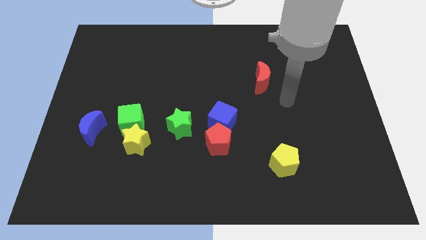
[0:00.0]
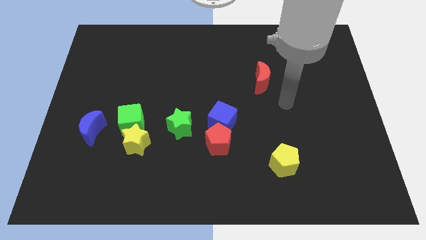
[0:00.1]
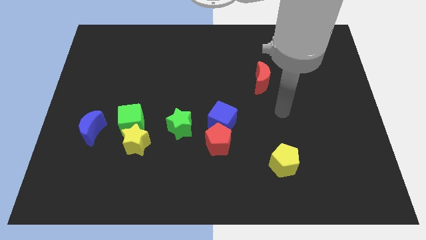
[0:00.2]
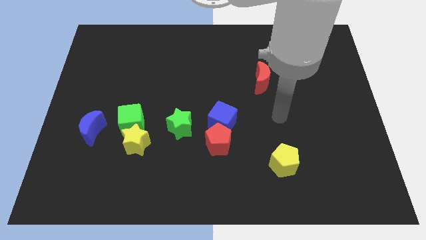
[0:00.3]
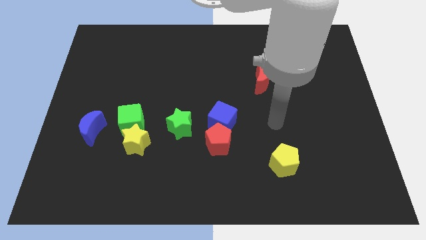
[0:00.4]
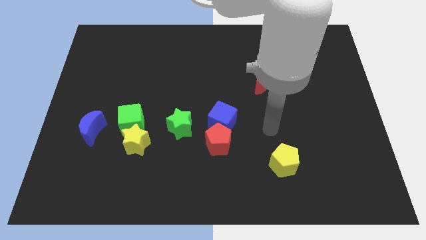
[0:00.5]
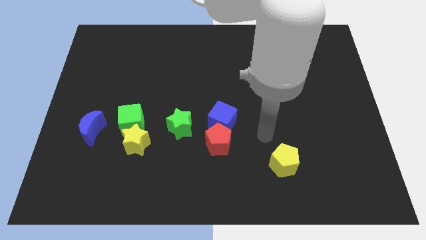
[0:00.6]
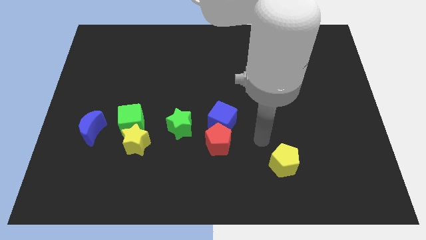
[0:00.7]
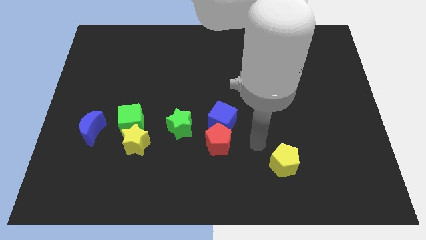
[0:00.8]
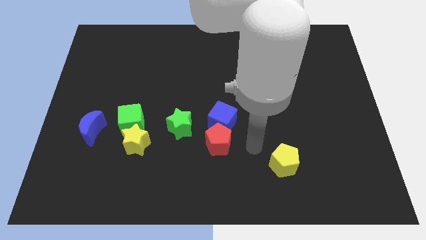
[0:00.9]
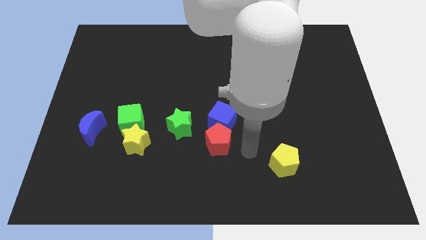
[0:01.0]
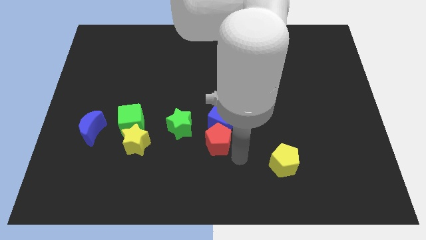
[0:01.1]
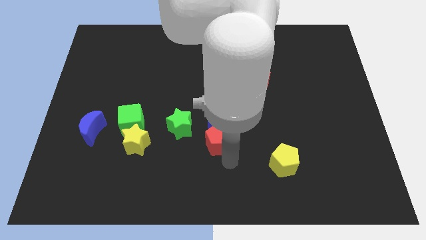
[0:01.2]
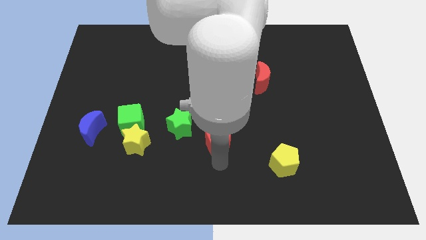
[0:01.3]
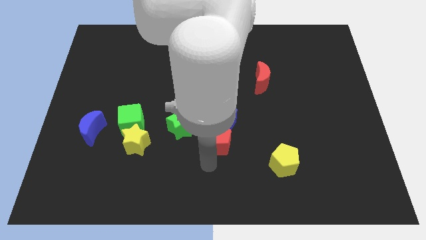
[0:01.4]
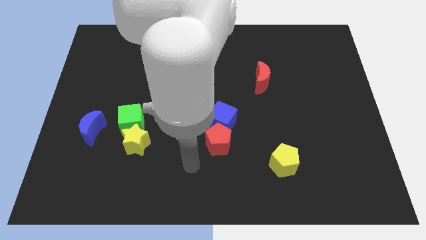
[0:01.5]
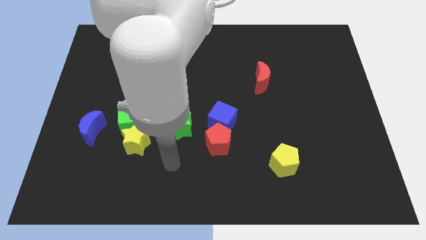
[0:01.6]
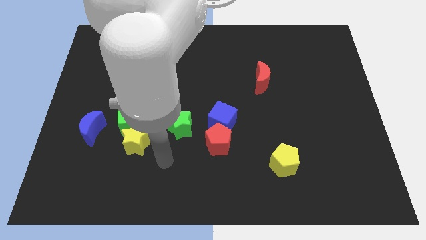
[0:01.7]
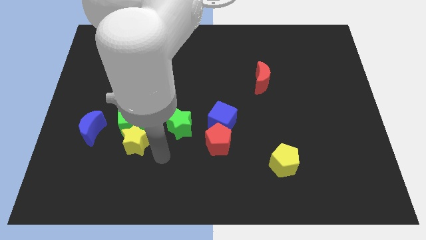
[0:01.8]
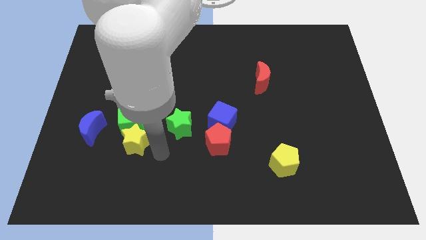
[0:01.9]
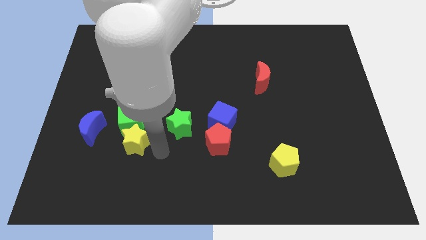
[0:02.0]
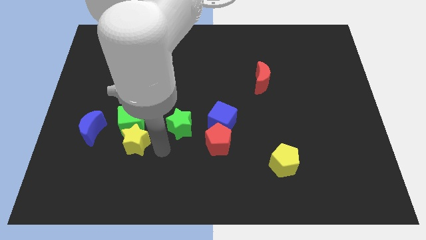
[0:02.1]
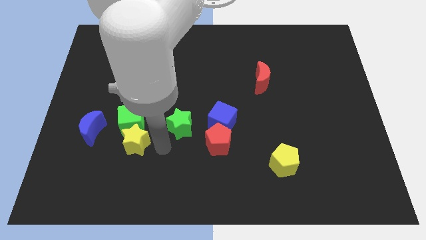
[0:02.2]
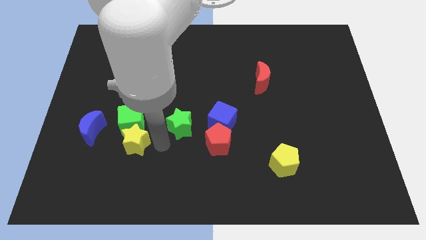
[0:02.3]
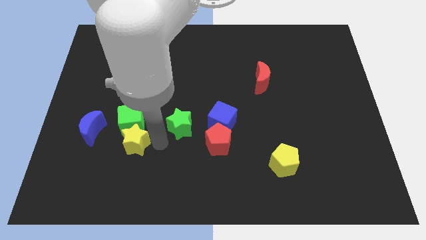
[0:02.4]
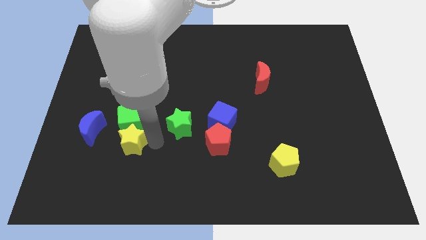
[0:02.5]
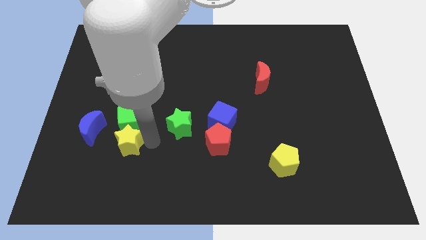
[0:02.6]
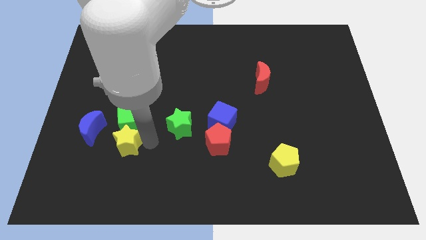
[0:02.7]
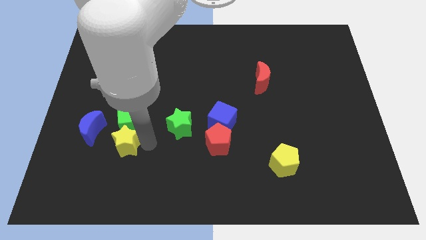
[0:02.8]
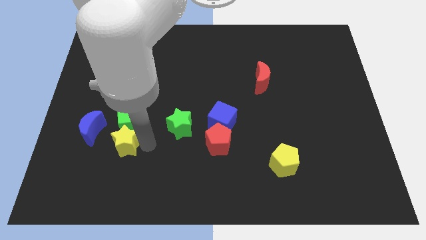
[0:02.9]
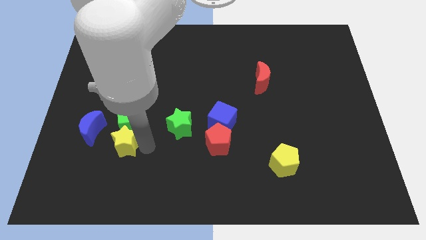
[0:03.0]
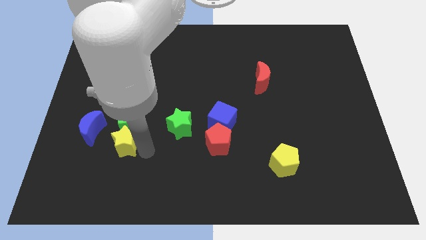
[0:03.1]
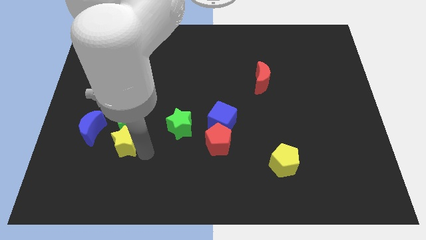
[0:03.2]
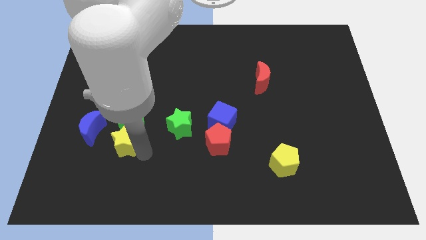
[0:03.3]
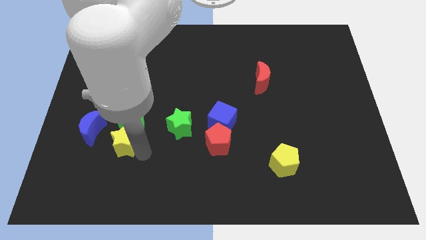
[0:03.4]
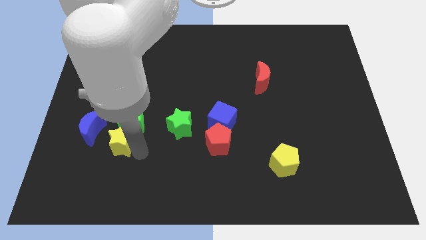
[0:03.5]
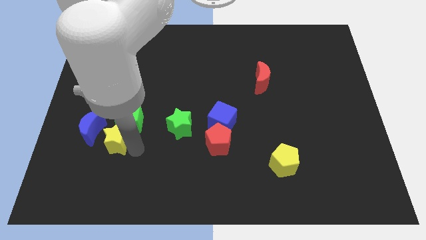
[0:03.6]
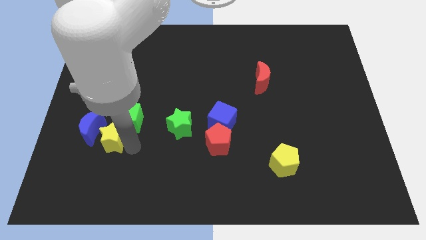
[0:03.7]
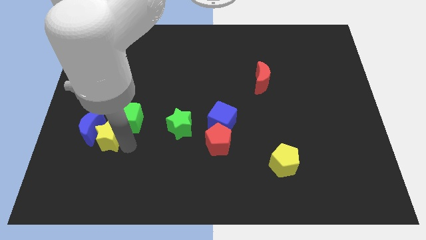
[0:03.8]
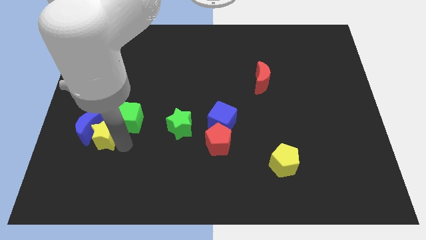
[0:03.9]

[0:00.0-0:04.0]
move the yellow star towards the blue moon

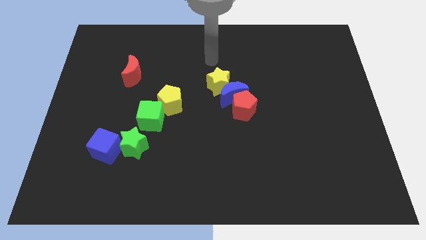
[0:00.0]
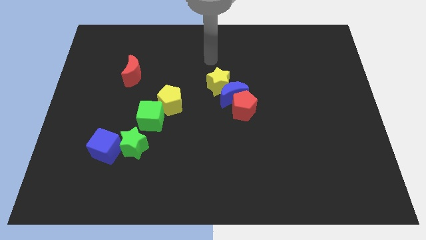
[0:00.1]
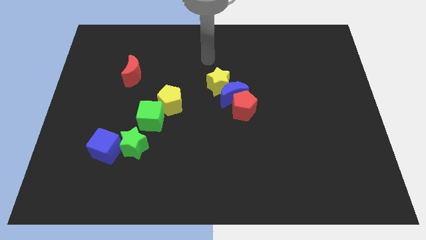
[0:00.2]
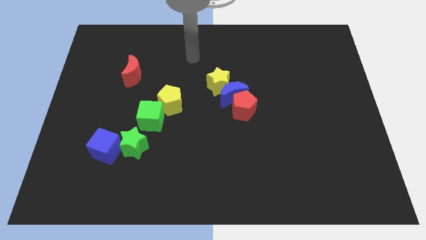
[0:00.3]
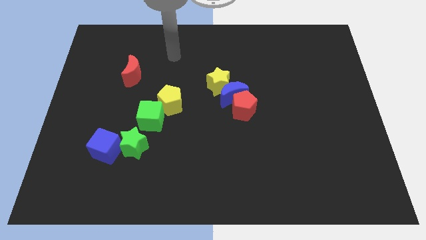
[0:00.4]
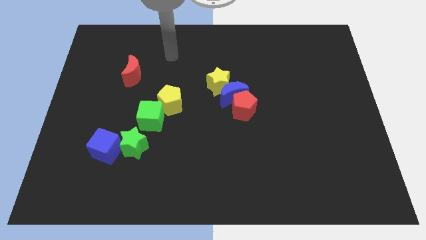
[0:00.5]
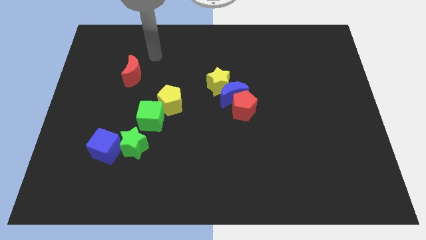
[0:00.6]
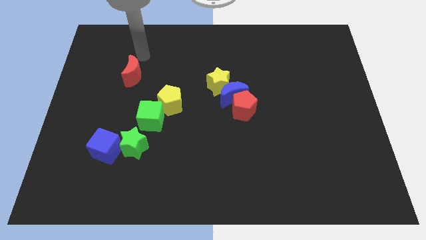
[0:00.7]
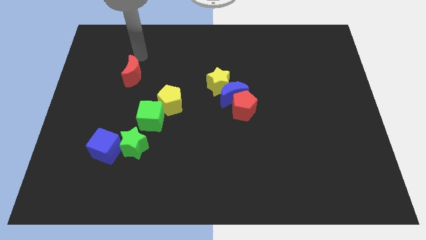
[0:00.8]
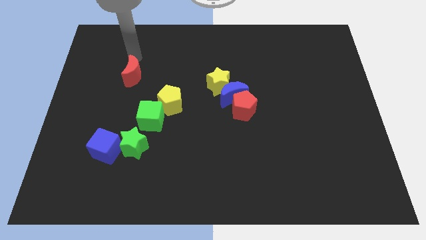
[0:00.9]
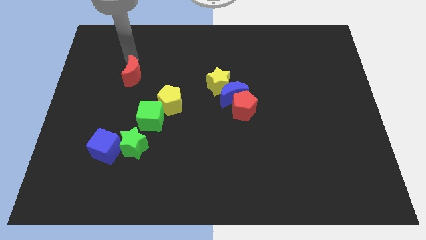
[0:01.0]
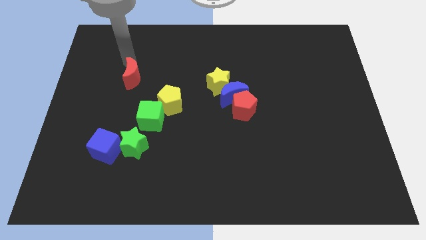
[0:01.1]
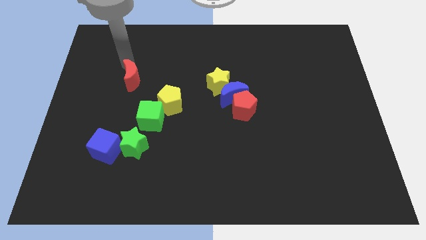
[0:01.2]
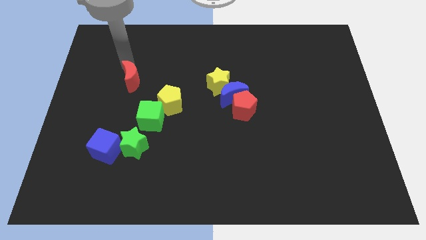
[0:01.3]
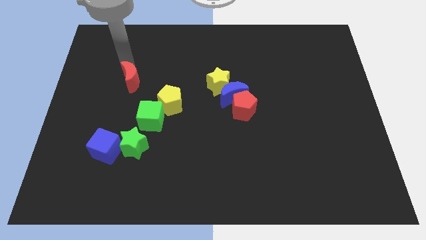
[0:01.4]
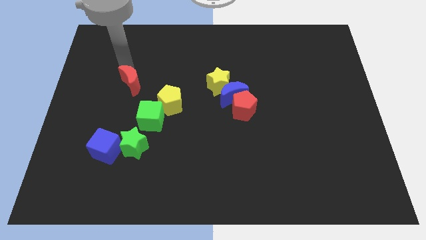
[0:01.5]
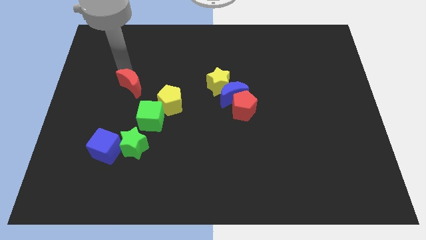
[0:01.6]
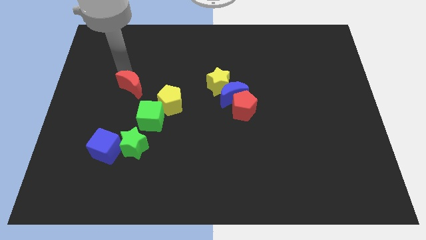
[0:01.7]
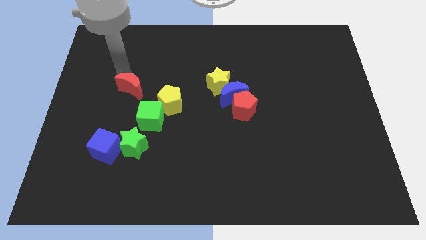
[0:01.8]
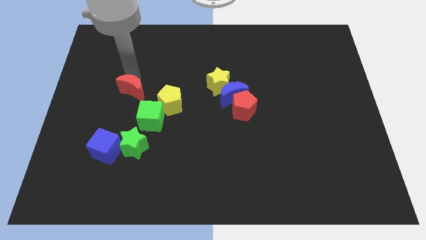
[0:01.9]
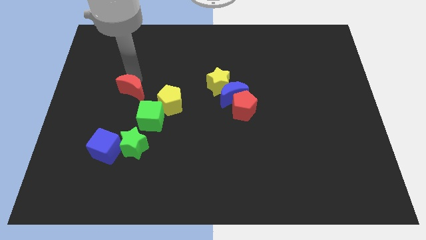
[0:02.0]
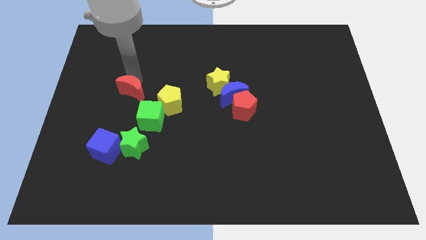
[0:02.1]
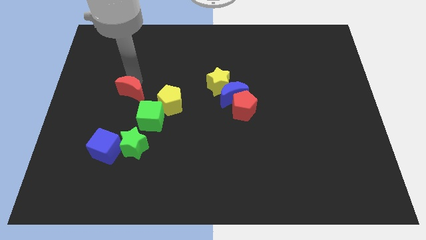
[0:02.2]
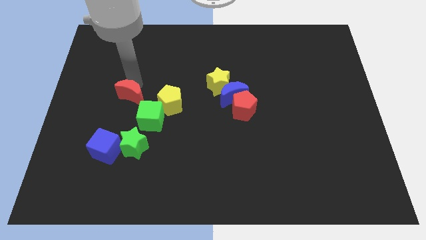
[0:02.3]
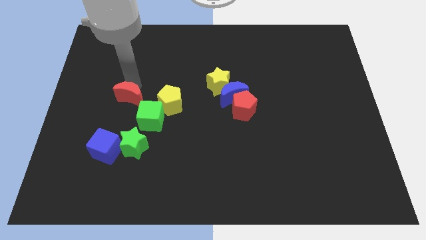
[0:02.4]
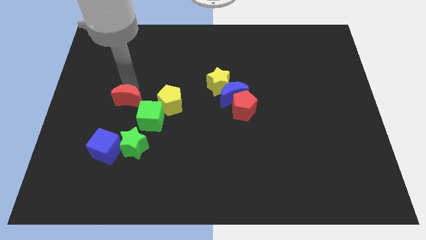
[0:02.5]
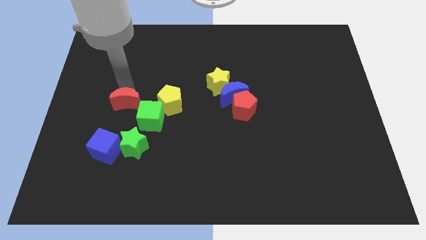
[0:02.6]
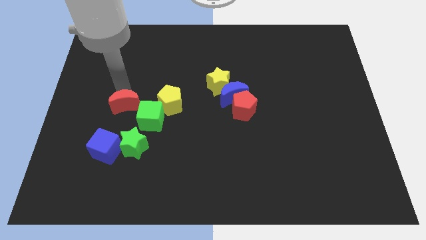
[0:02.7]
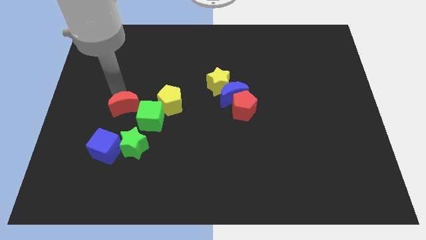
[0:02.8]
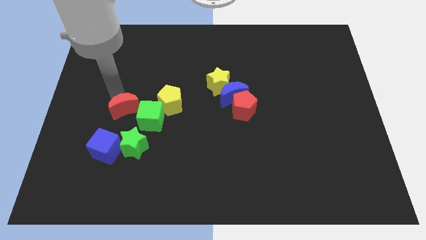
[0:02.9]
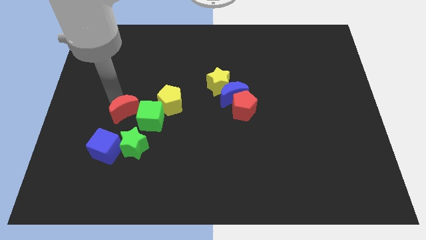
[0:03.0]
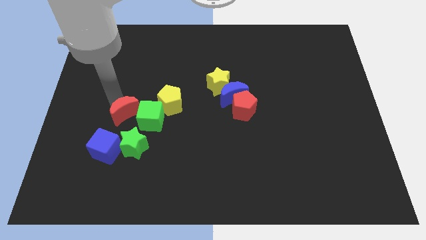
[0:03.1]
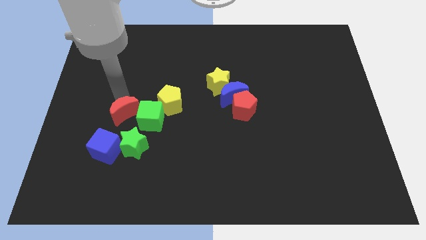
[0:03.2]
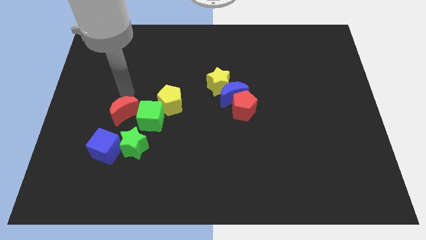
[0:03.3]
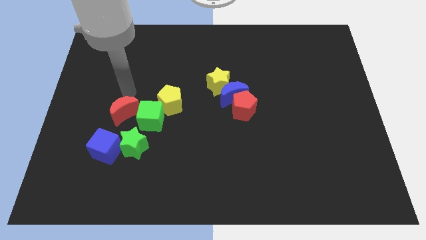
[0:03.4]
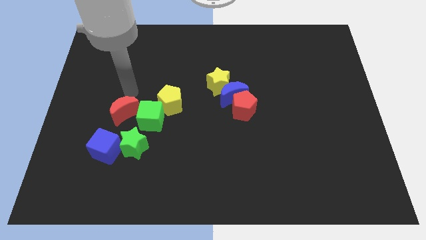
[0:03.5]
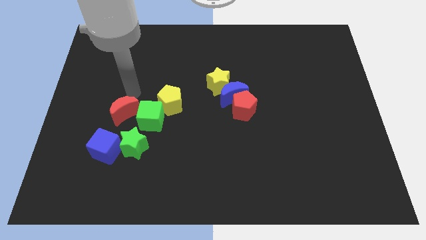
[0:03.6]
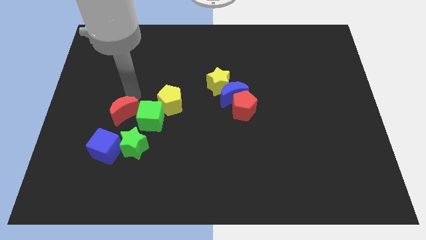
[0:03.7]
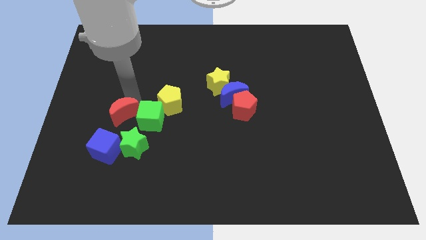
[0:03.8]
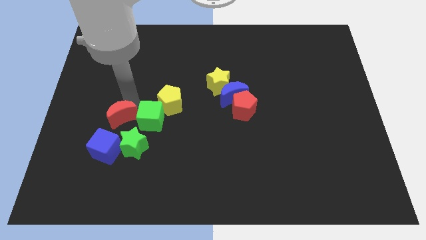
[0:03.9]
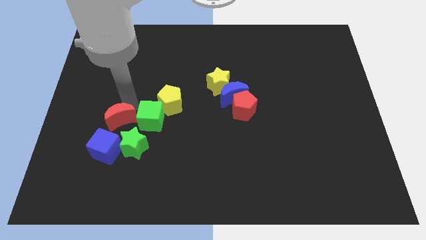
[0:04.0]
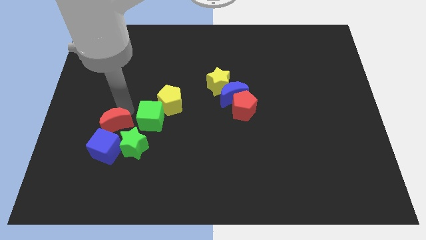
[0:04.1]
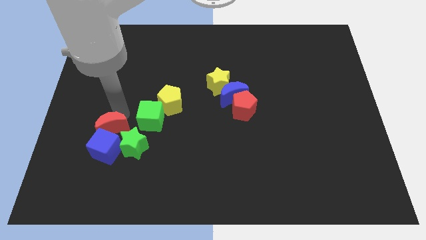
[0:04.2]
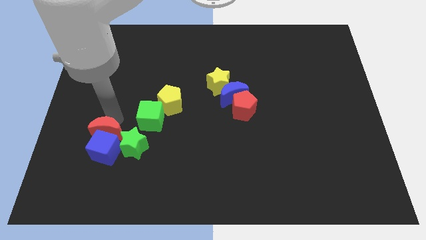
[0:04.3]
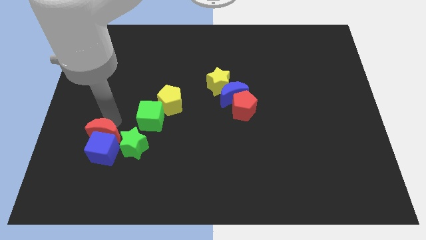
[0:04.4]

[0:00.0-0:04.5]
push the red moon to the blue cube
